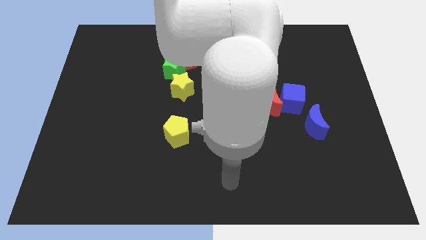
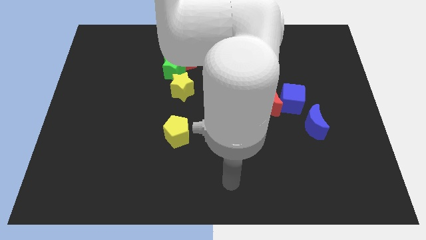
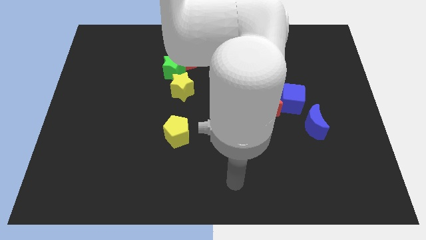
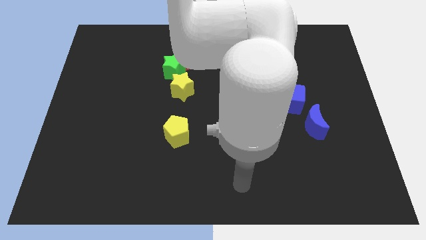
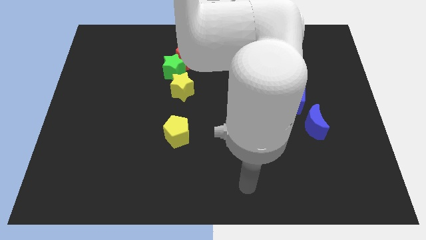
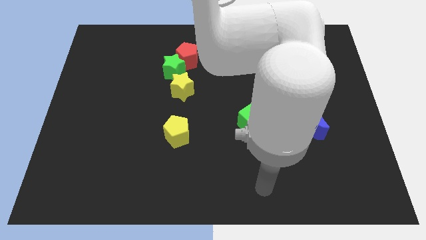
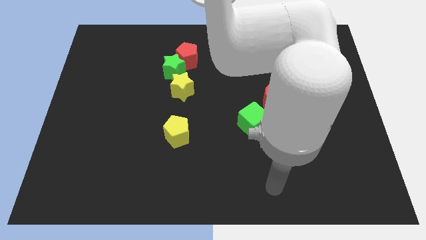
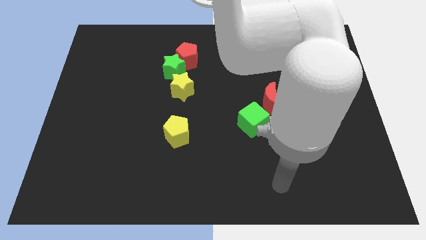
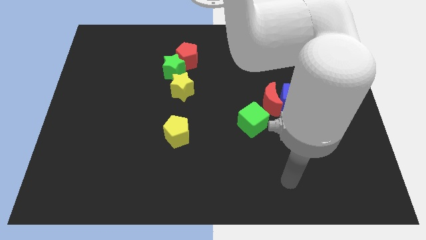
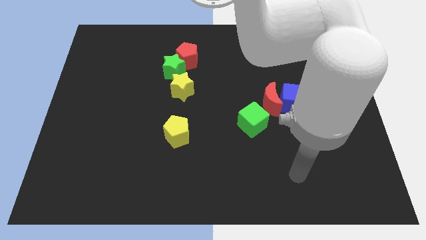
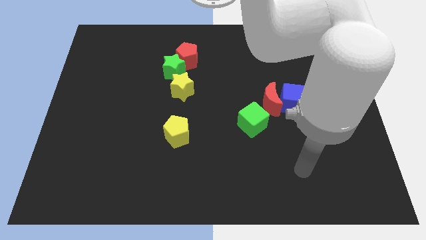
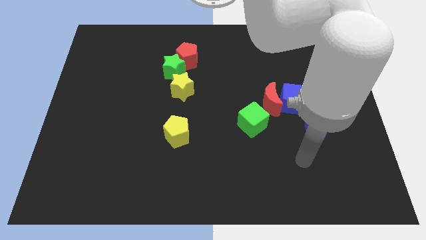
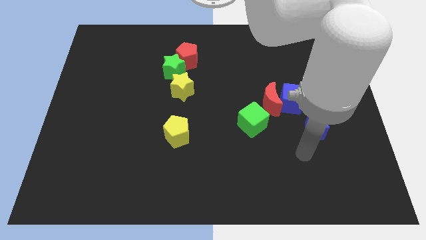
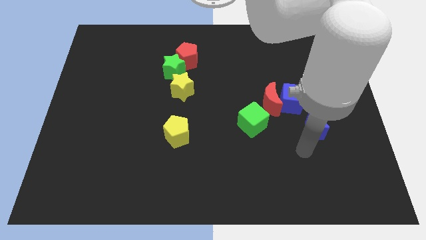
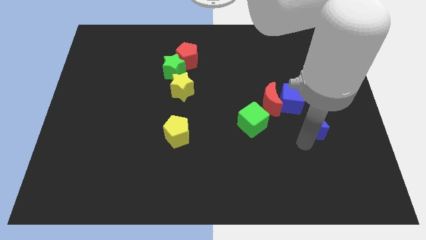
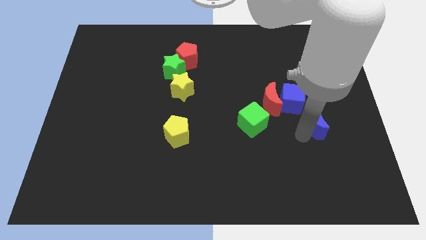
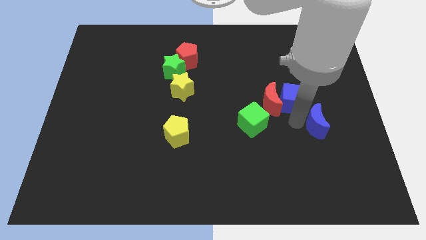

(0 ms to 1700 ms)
place the arm at the left side of the blue crescent

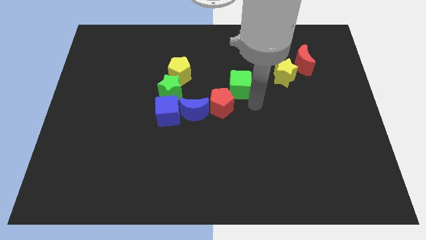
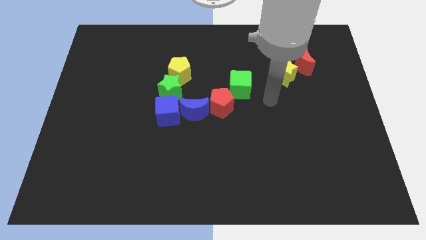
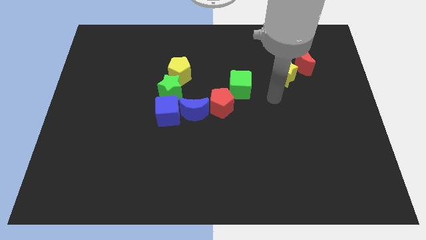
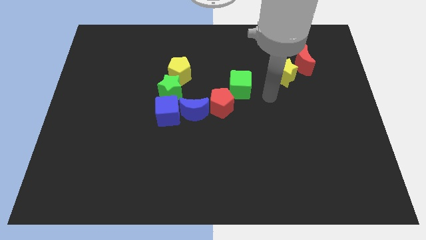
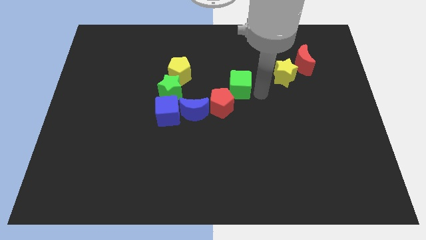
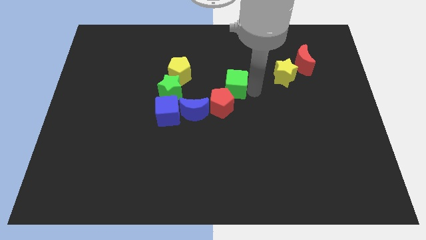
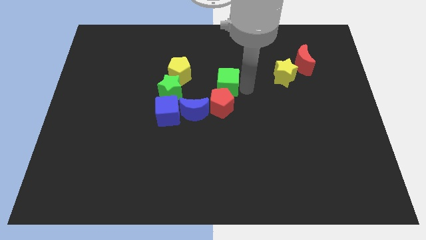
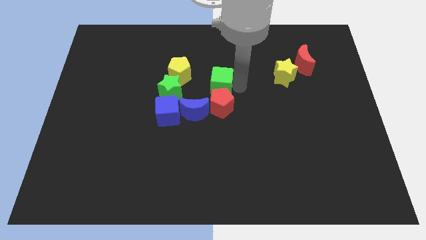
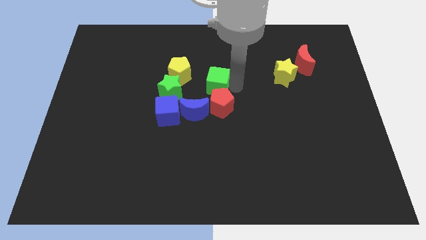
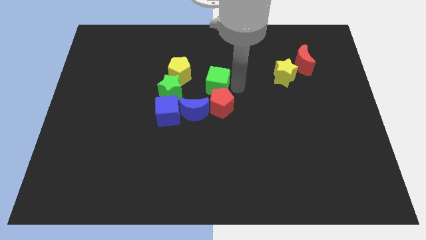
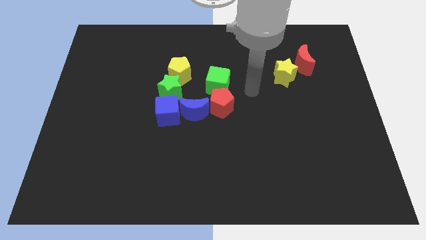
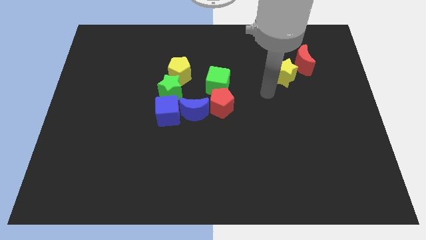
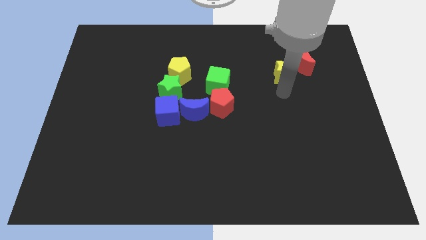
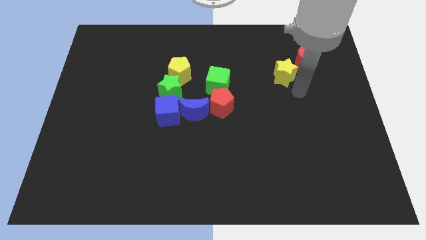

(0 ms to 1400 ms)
place the green square above the red pentagon

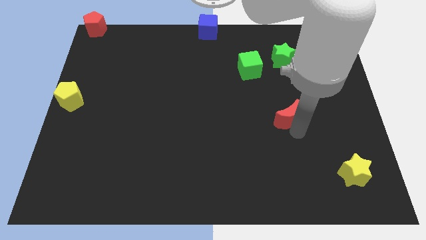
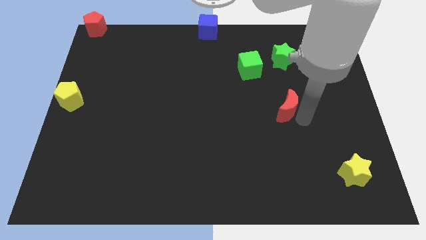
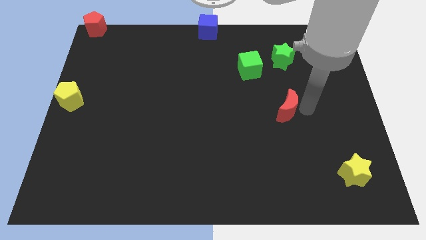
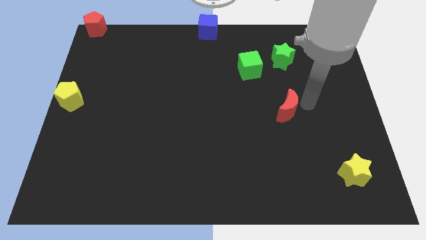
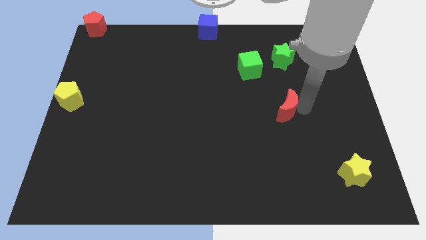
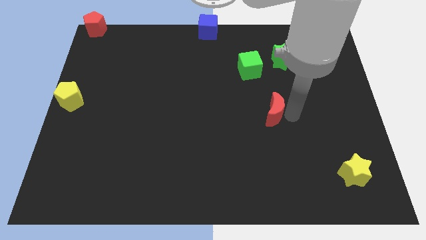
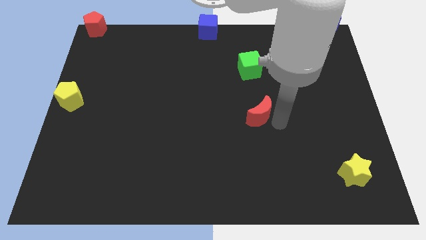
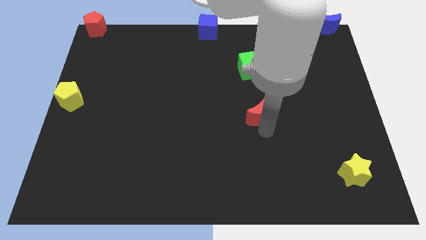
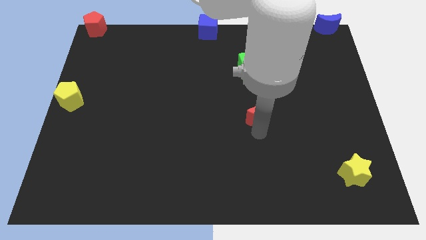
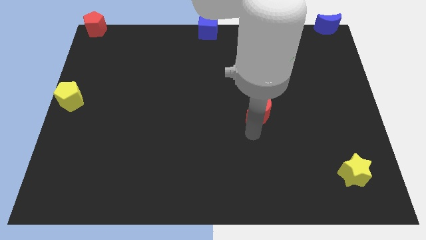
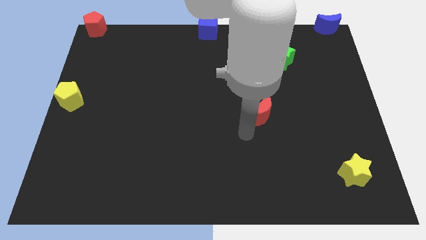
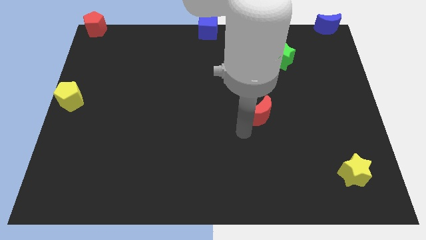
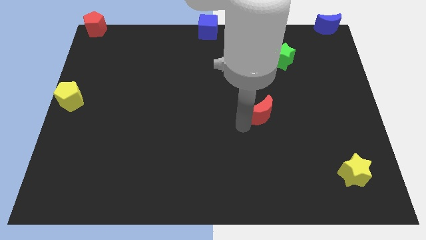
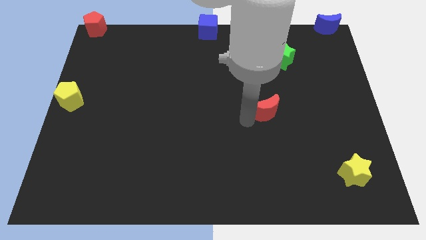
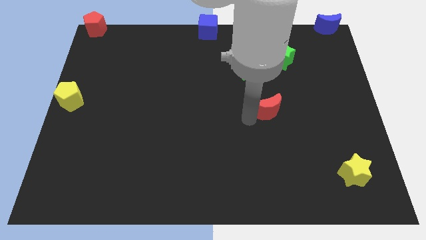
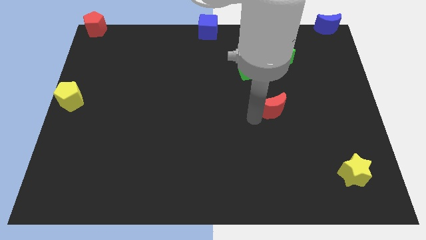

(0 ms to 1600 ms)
push the red crescent left and top a bit

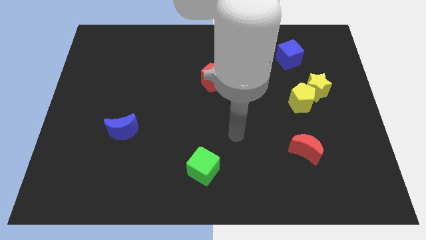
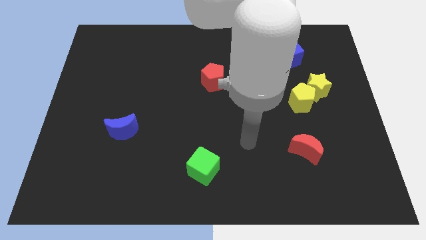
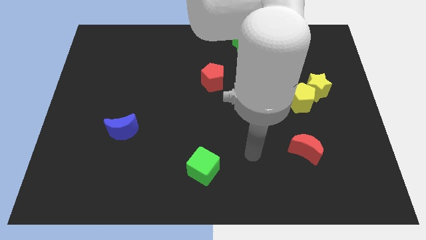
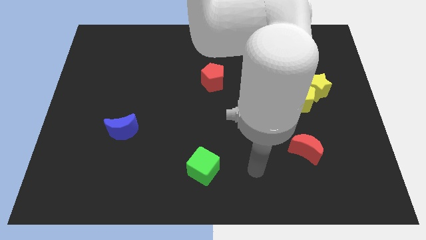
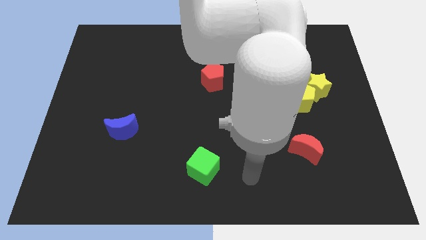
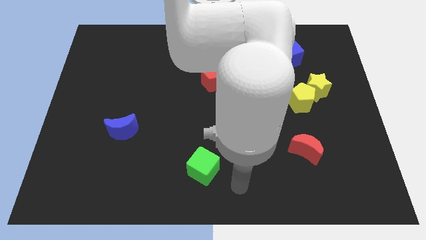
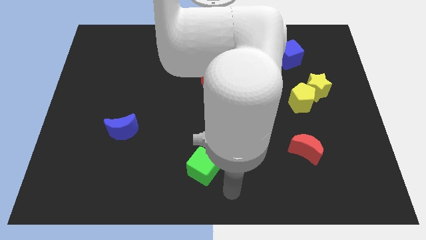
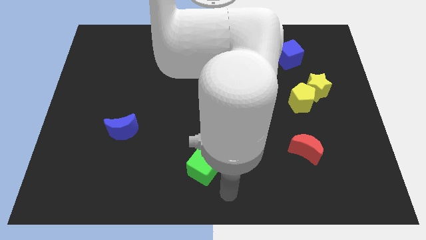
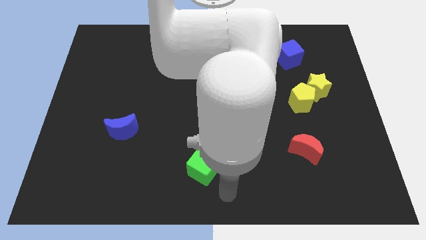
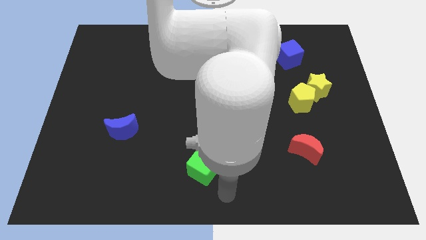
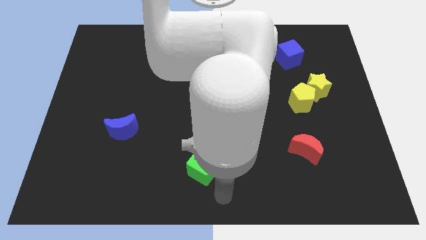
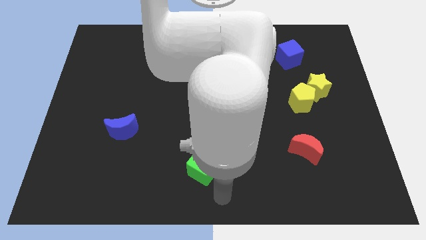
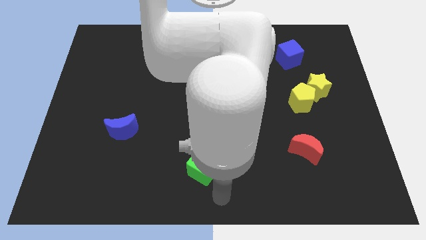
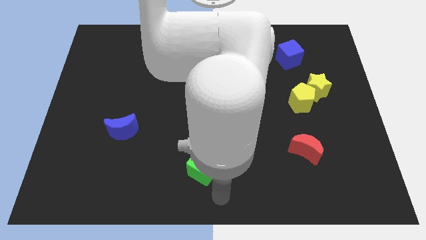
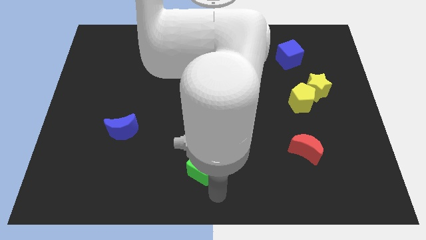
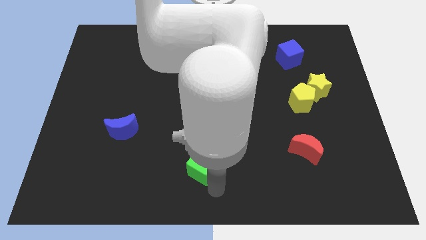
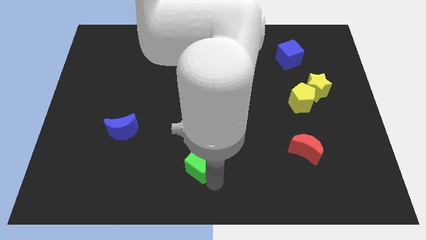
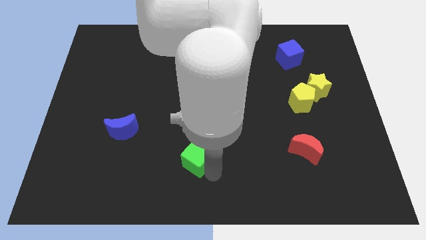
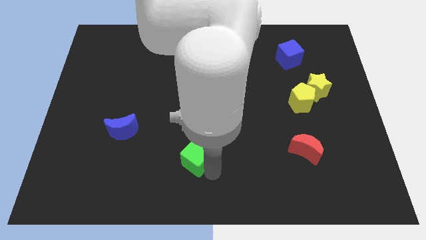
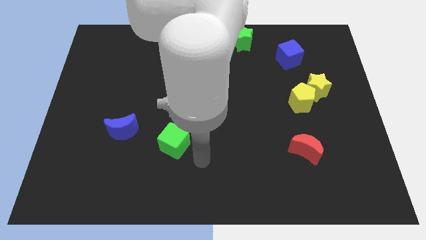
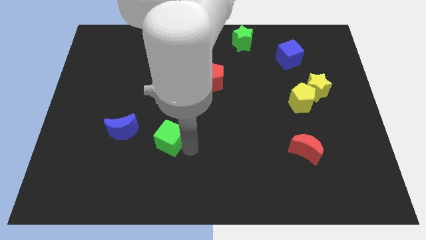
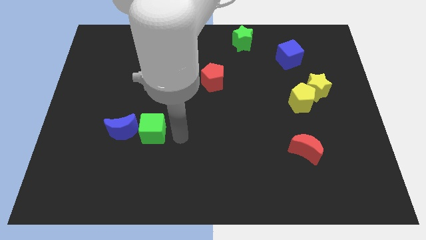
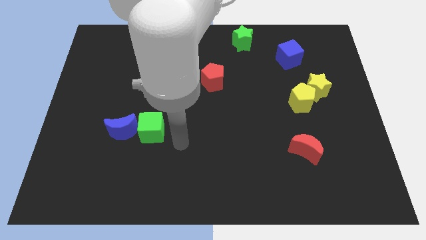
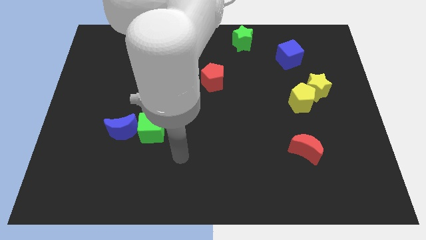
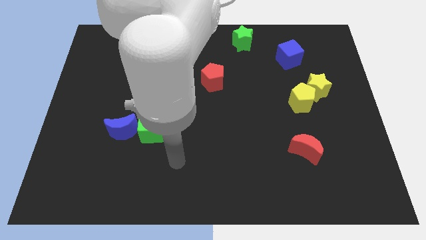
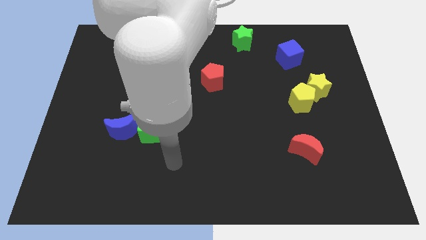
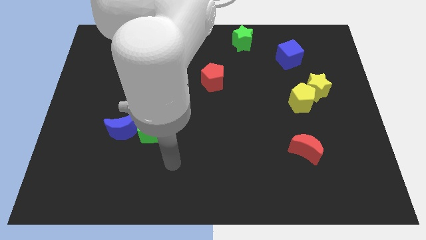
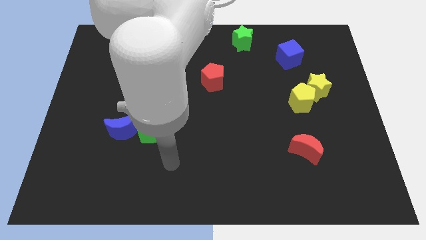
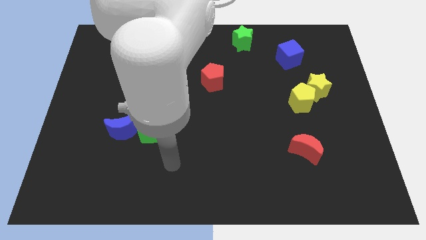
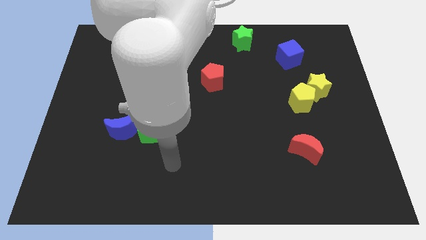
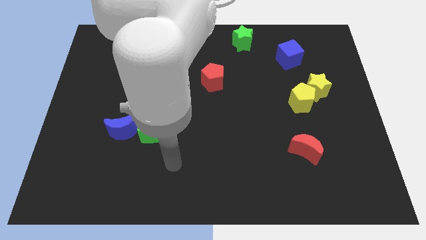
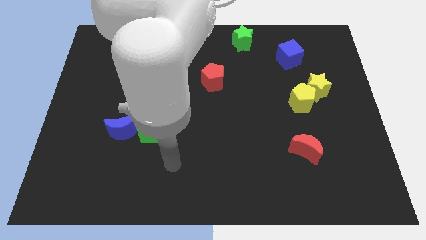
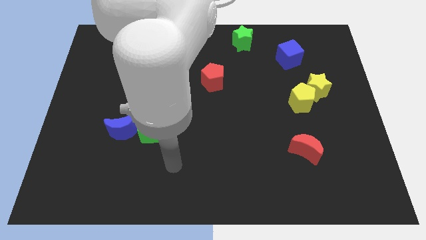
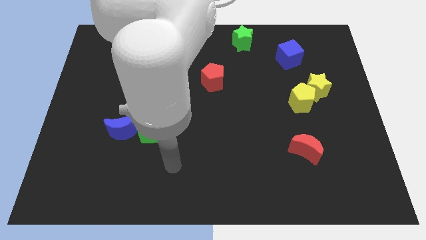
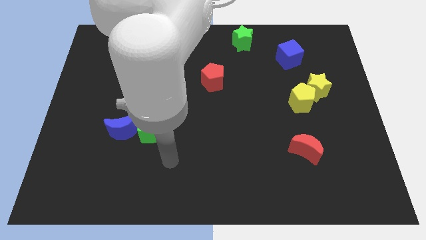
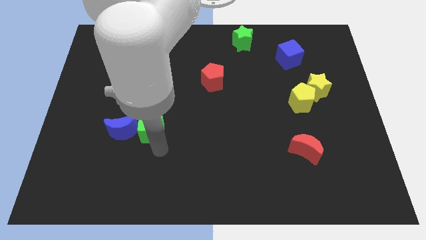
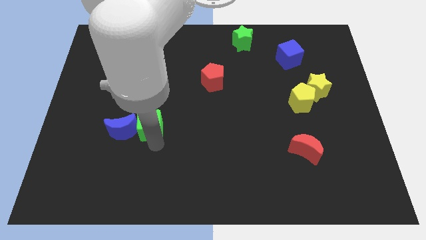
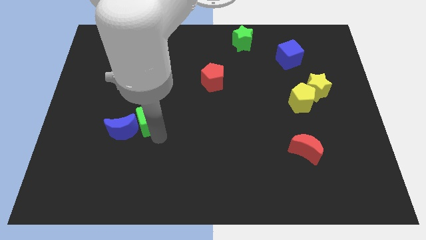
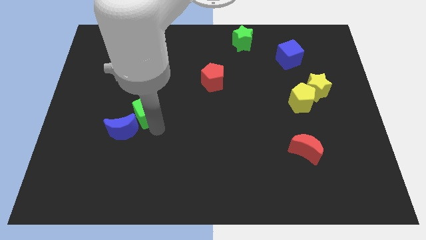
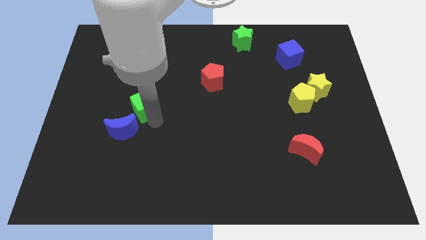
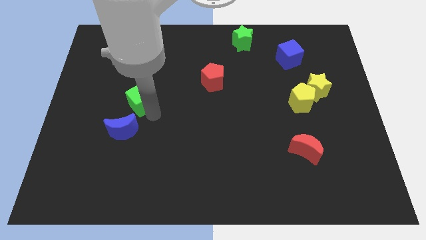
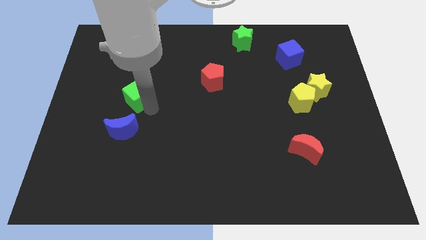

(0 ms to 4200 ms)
place green cube on top of blue moon
